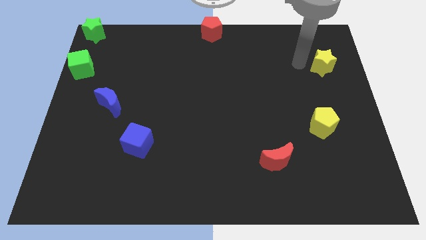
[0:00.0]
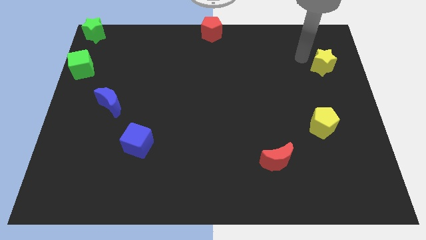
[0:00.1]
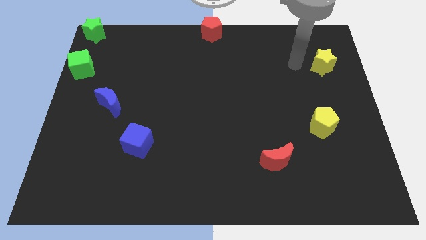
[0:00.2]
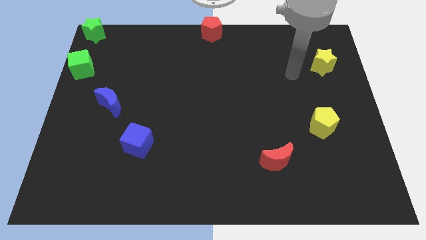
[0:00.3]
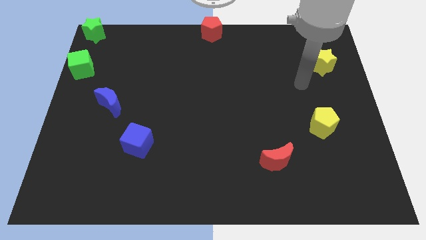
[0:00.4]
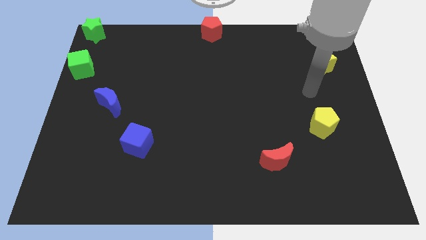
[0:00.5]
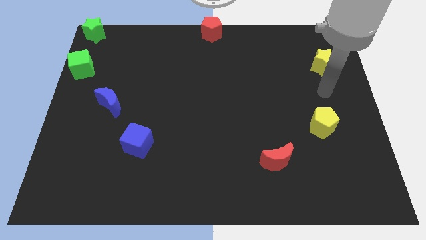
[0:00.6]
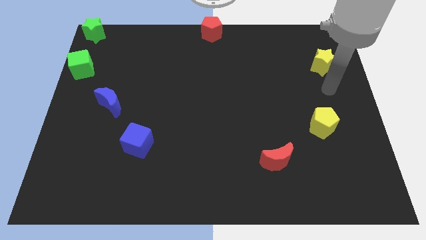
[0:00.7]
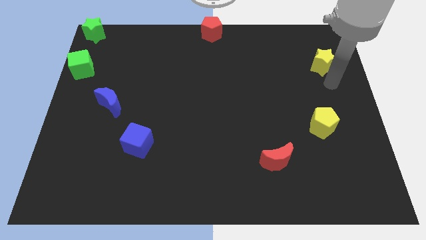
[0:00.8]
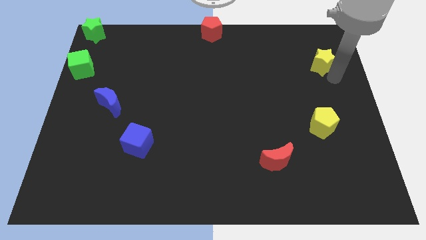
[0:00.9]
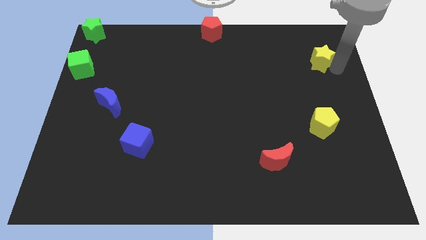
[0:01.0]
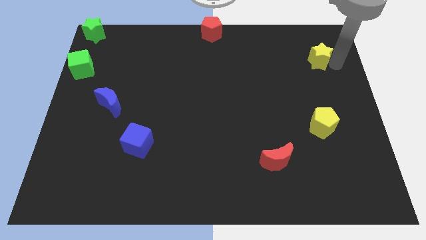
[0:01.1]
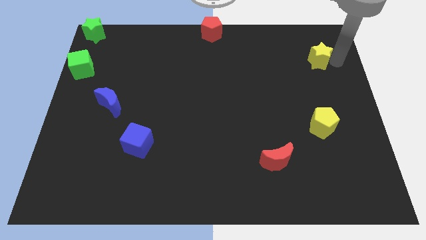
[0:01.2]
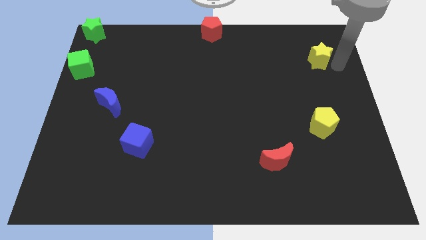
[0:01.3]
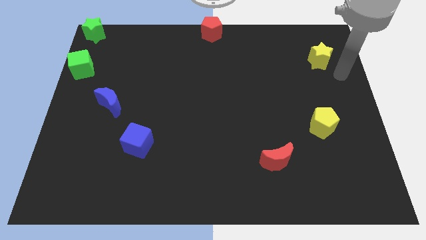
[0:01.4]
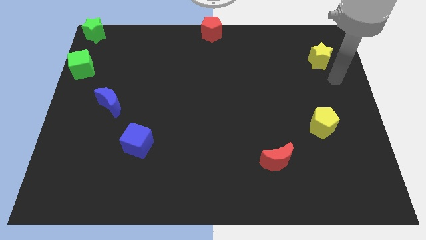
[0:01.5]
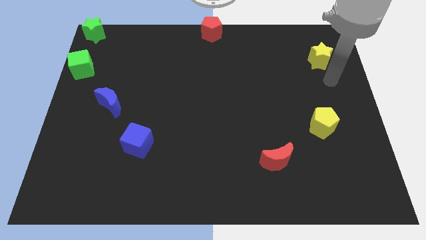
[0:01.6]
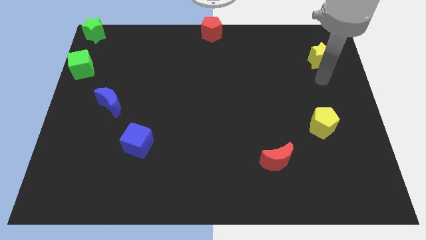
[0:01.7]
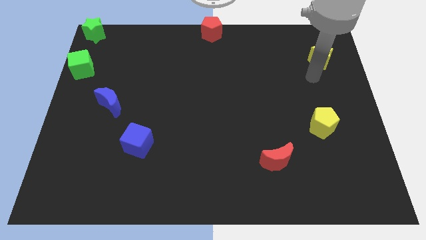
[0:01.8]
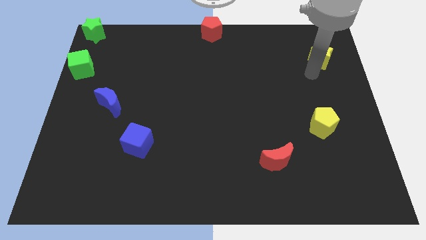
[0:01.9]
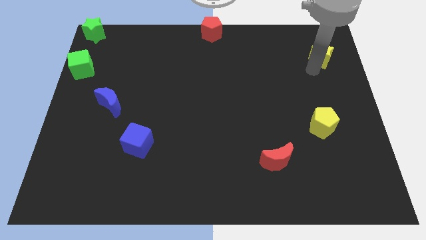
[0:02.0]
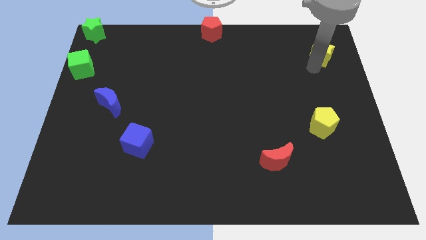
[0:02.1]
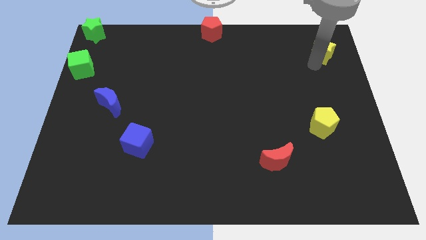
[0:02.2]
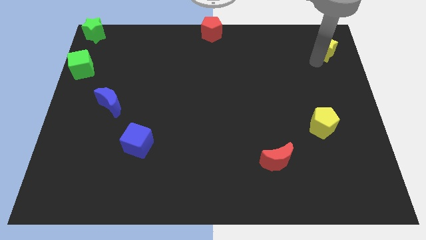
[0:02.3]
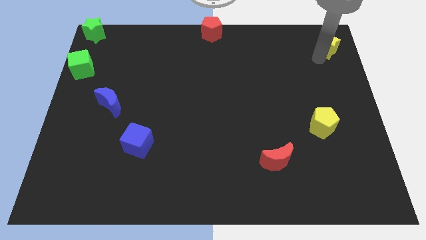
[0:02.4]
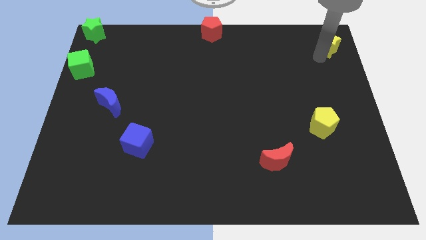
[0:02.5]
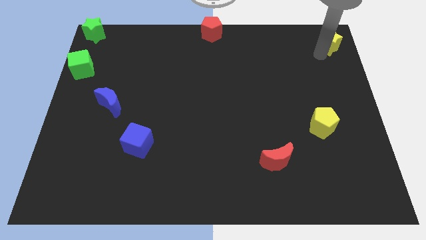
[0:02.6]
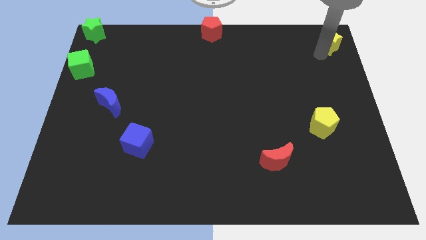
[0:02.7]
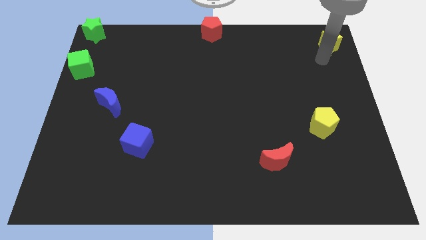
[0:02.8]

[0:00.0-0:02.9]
push the yellow star at the top right corner

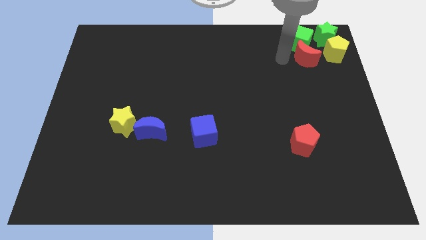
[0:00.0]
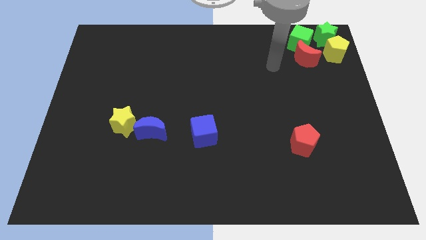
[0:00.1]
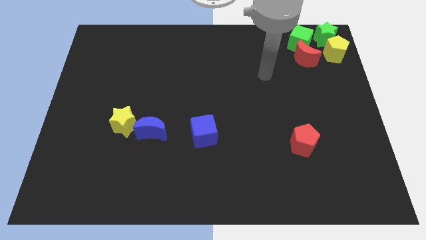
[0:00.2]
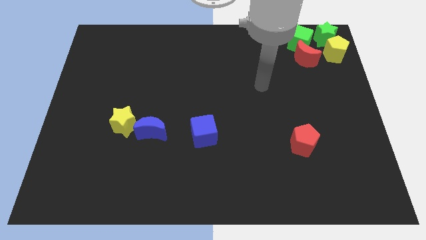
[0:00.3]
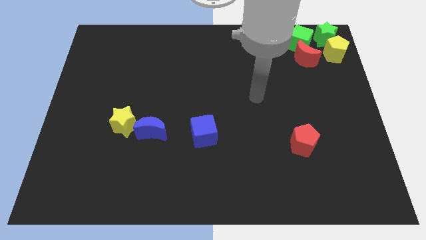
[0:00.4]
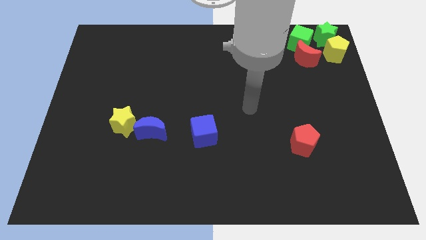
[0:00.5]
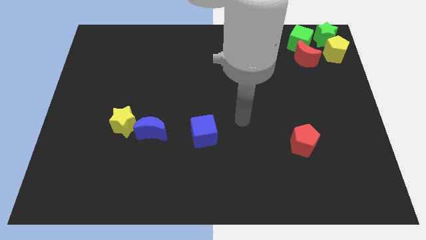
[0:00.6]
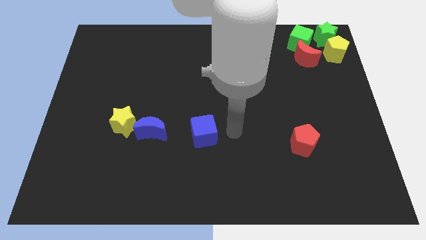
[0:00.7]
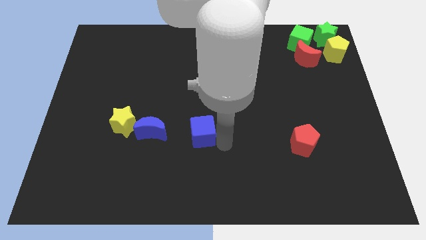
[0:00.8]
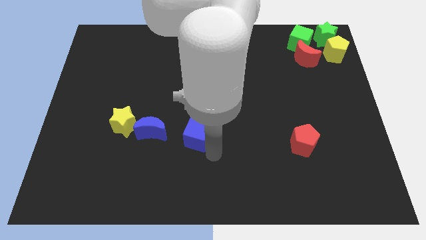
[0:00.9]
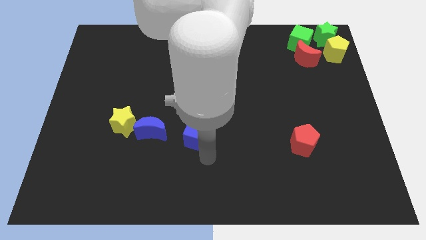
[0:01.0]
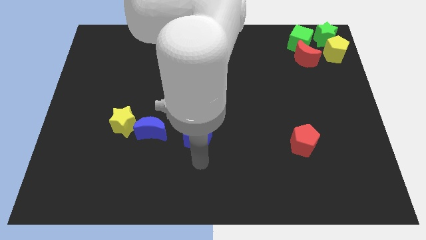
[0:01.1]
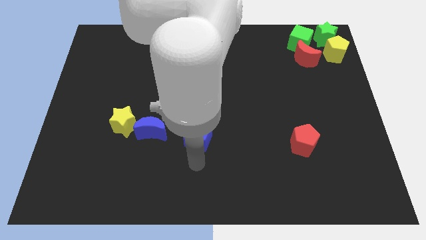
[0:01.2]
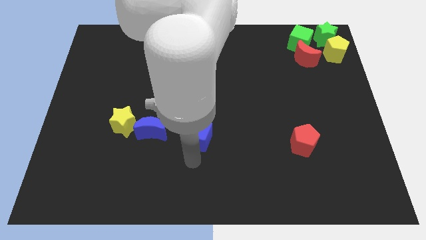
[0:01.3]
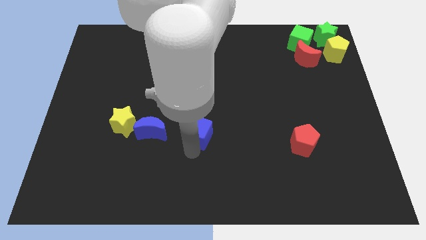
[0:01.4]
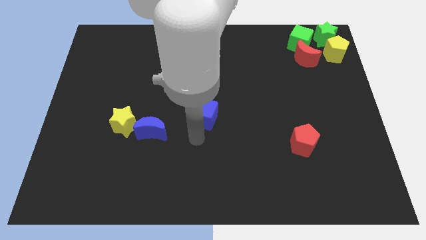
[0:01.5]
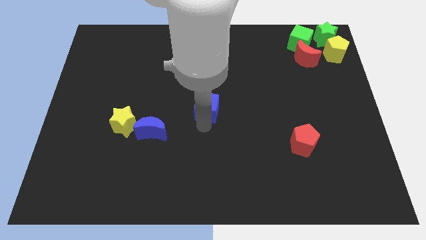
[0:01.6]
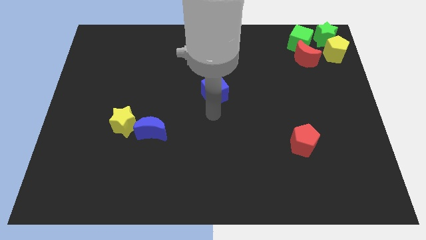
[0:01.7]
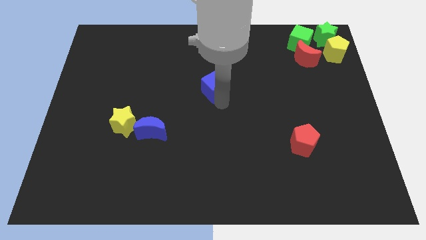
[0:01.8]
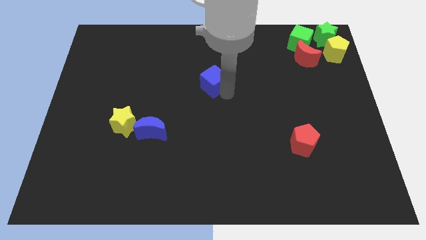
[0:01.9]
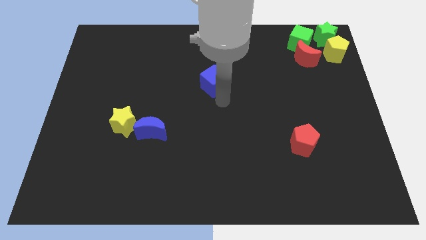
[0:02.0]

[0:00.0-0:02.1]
place the blue cube towards the center of the board

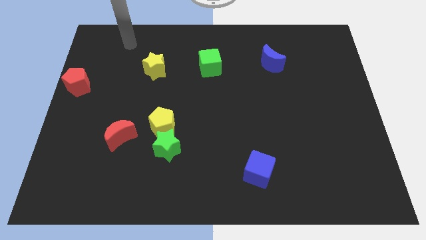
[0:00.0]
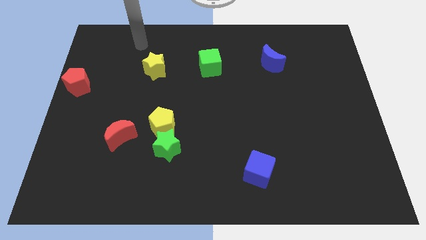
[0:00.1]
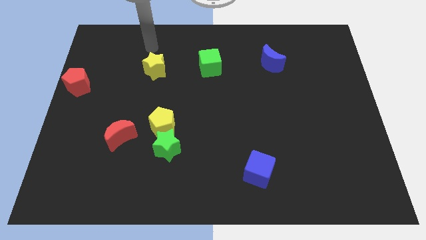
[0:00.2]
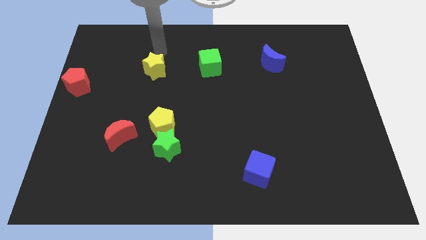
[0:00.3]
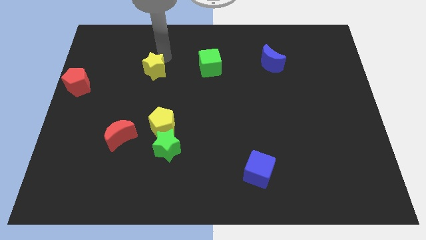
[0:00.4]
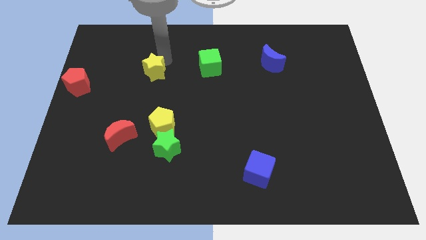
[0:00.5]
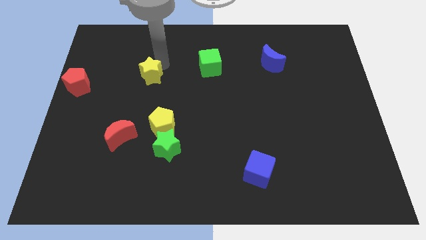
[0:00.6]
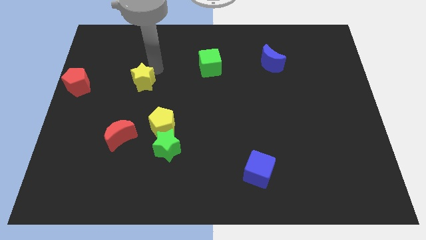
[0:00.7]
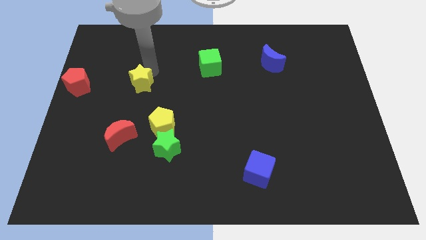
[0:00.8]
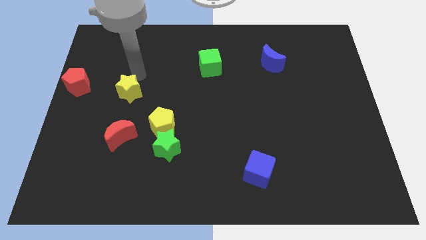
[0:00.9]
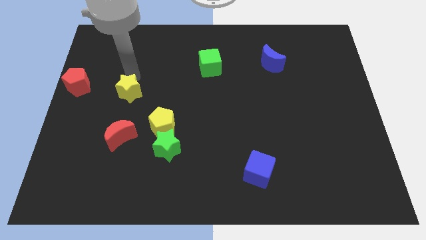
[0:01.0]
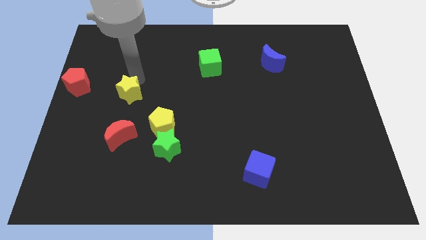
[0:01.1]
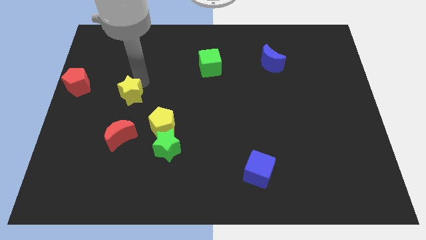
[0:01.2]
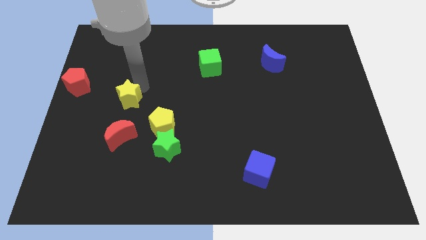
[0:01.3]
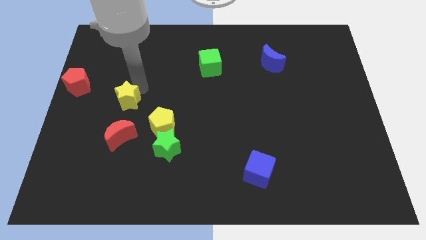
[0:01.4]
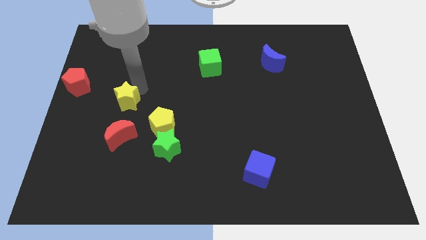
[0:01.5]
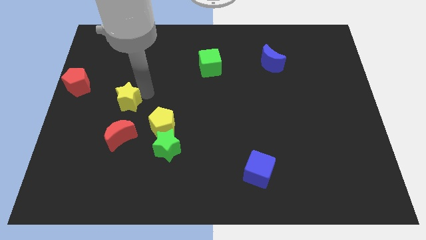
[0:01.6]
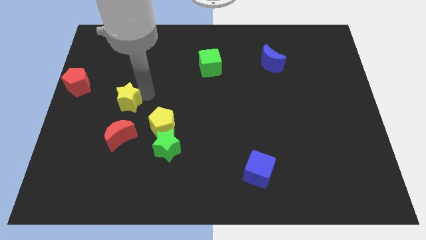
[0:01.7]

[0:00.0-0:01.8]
place the yellow star diagonally to the yellow pentagon

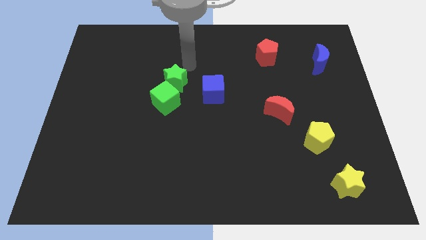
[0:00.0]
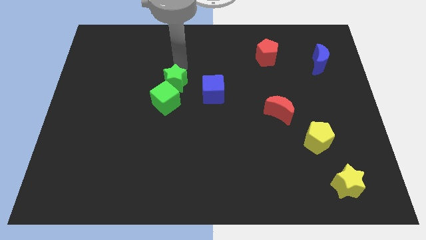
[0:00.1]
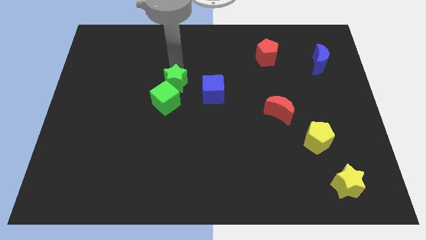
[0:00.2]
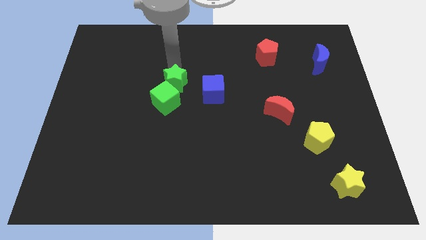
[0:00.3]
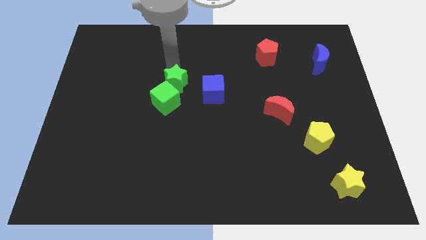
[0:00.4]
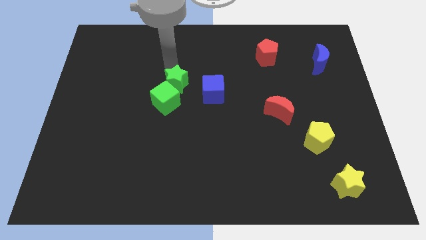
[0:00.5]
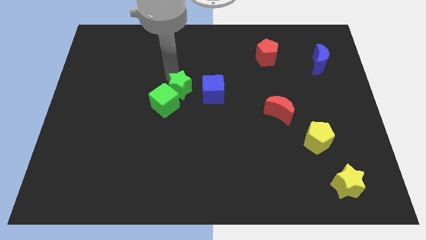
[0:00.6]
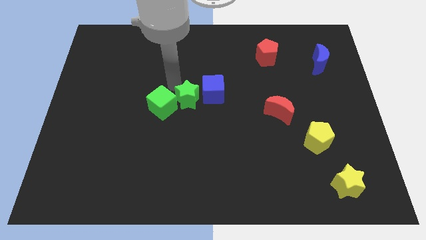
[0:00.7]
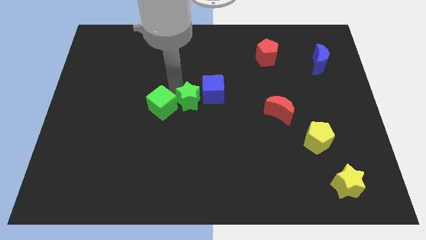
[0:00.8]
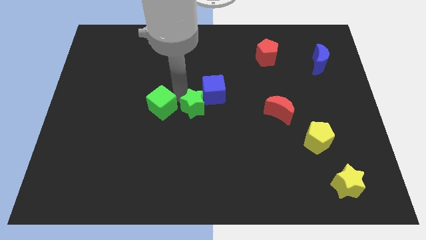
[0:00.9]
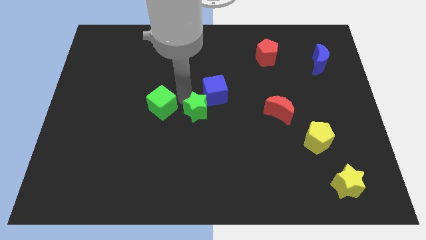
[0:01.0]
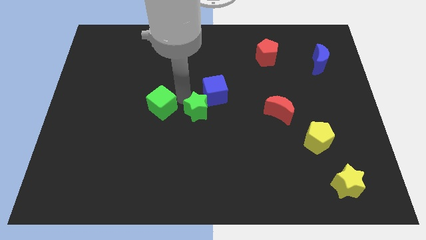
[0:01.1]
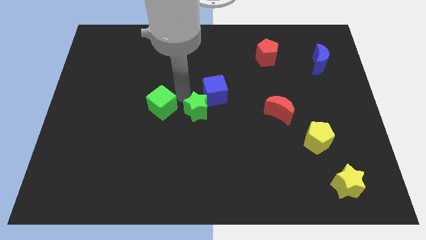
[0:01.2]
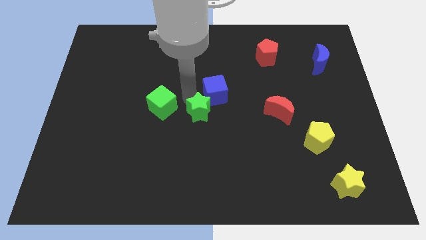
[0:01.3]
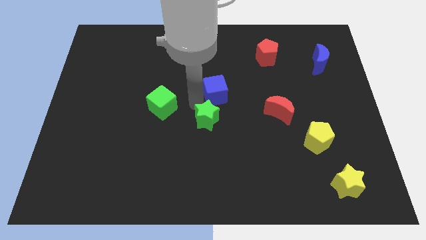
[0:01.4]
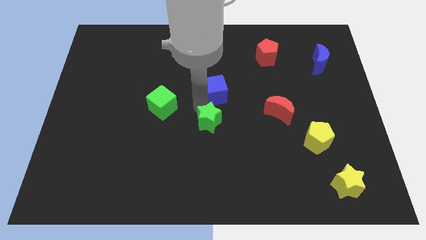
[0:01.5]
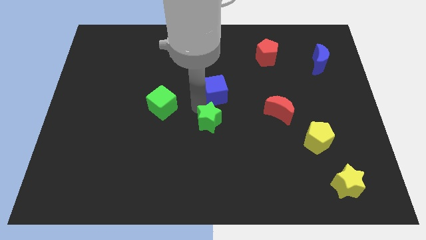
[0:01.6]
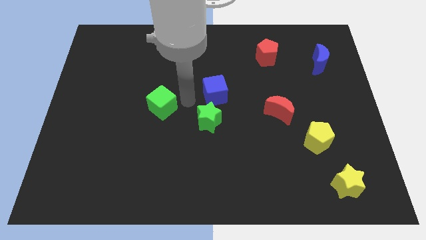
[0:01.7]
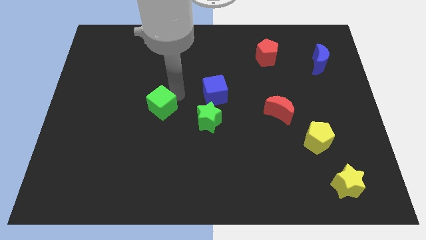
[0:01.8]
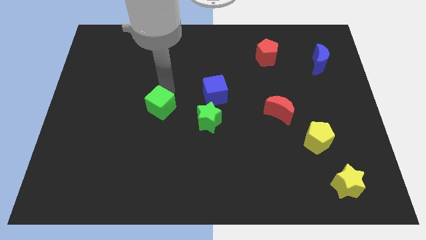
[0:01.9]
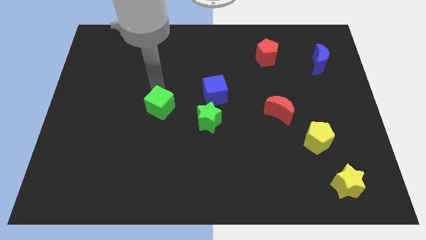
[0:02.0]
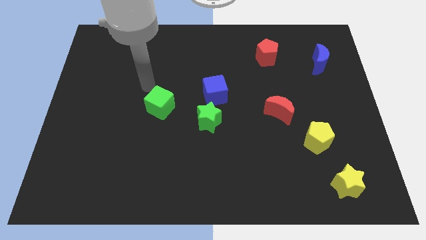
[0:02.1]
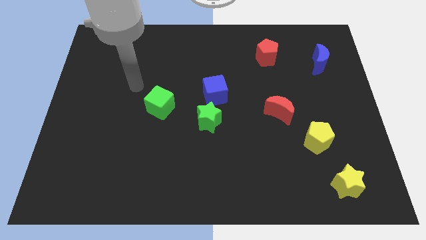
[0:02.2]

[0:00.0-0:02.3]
move the green star to the bottom of the blue cube
